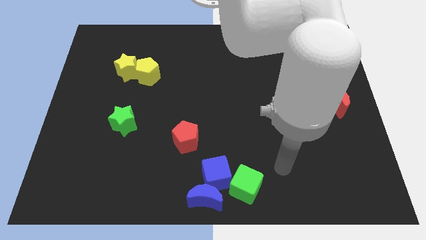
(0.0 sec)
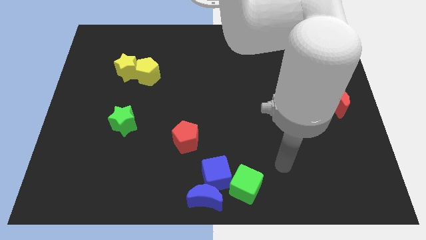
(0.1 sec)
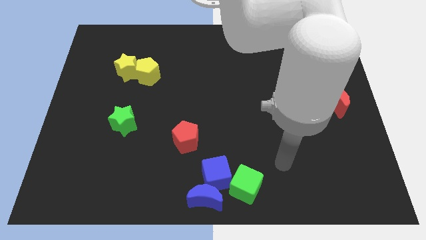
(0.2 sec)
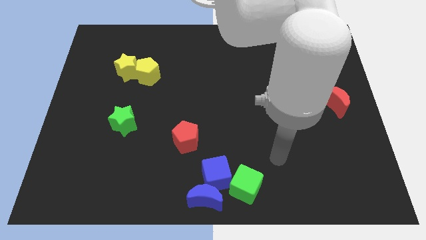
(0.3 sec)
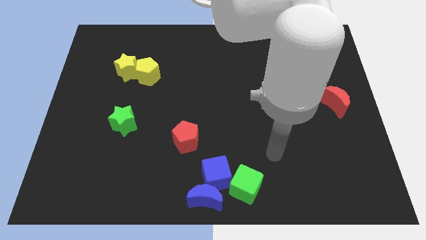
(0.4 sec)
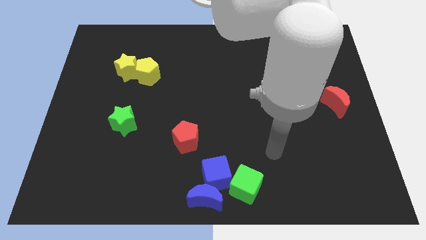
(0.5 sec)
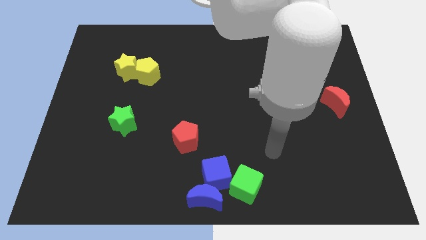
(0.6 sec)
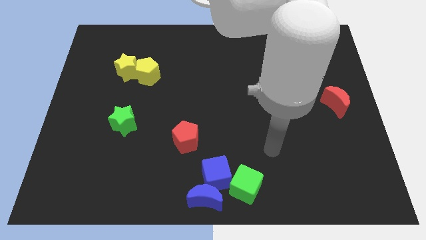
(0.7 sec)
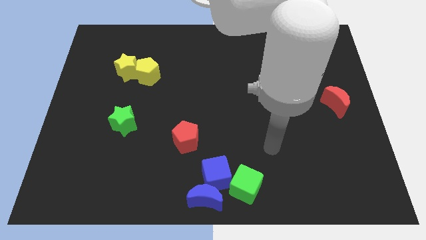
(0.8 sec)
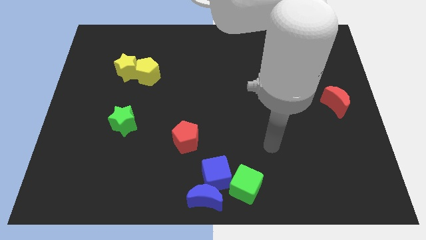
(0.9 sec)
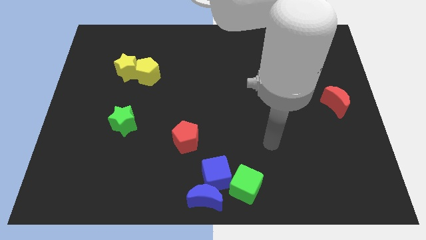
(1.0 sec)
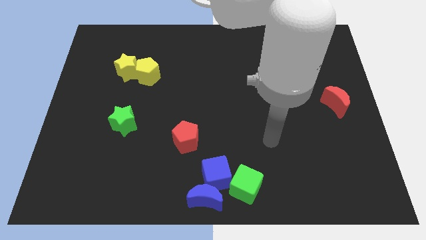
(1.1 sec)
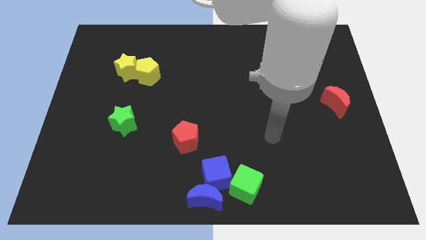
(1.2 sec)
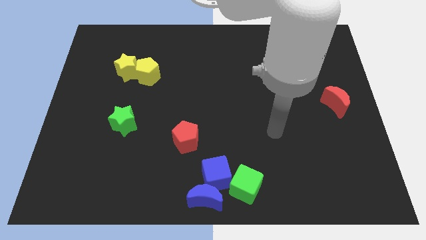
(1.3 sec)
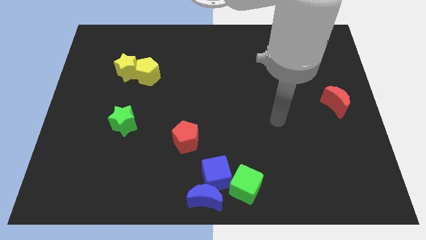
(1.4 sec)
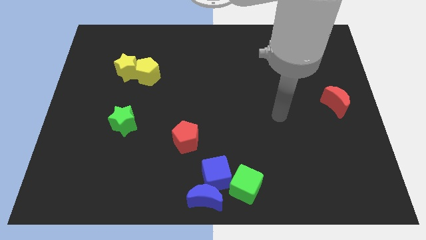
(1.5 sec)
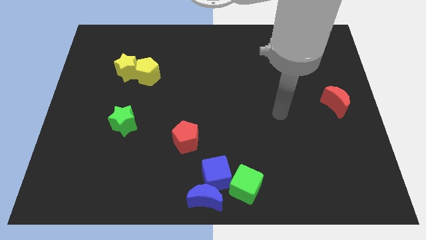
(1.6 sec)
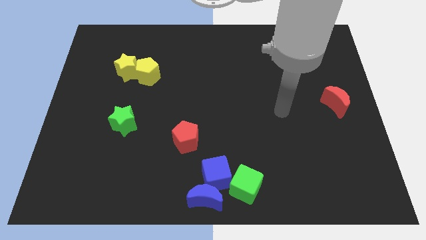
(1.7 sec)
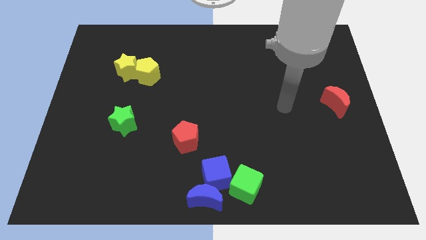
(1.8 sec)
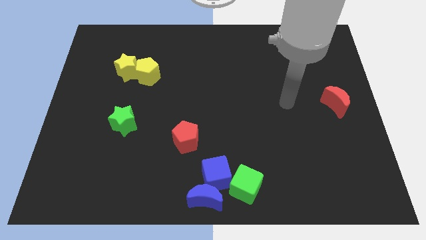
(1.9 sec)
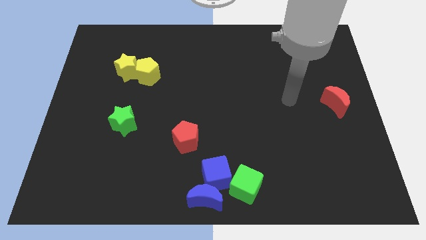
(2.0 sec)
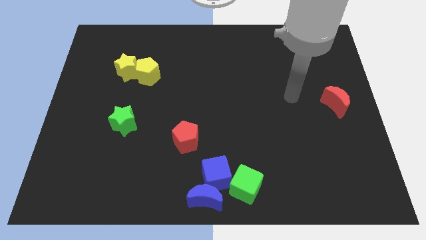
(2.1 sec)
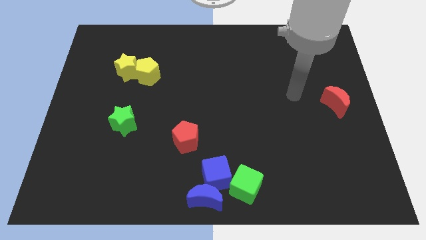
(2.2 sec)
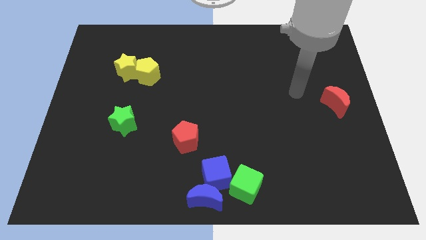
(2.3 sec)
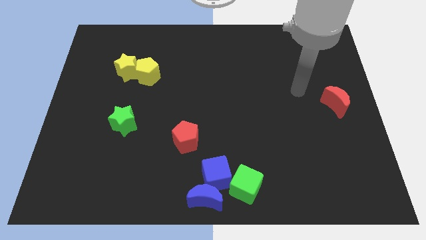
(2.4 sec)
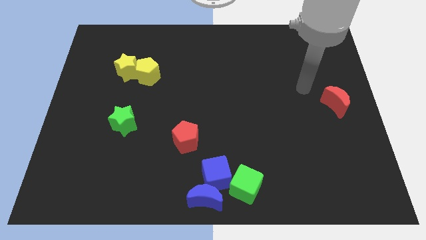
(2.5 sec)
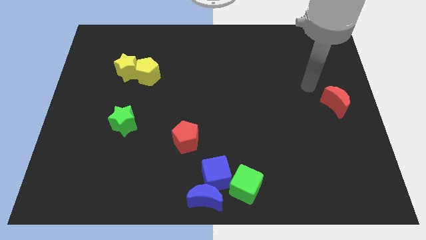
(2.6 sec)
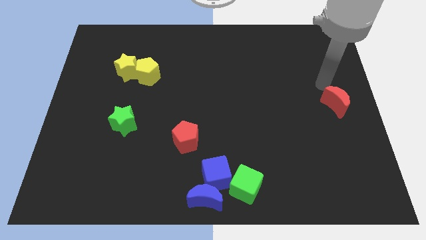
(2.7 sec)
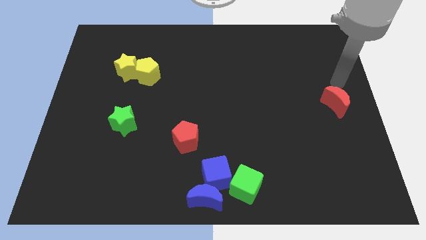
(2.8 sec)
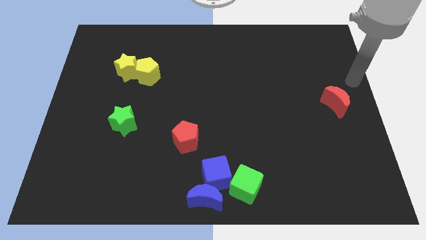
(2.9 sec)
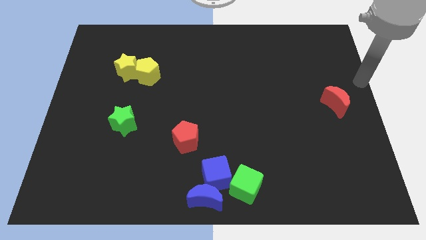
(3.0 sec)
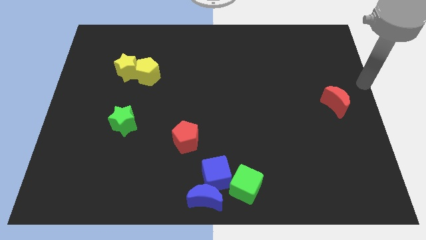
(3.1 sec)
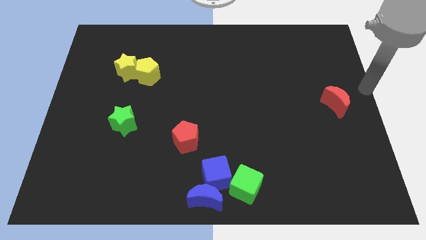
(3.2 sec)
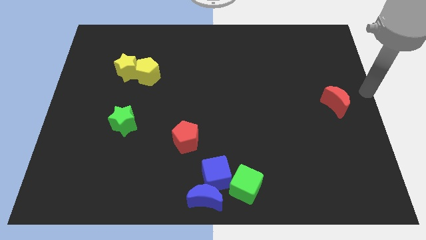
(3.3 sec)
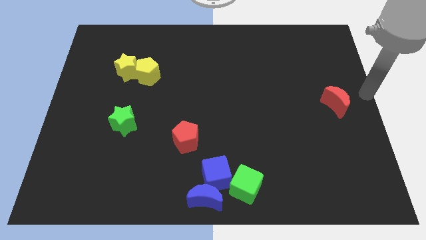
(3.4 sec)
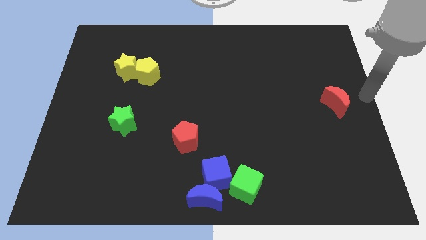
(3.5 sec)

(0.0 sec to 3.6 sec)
place your hand at the right center

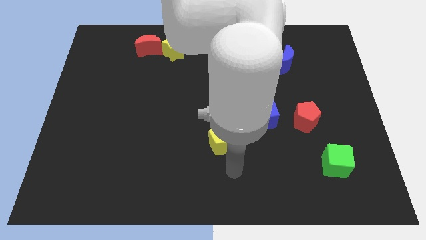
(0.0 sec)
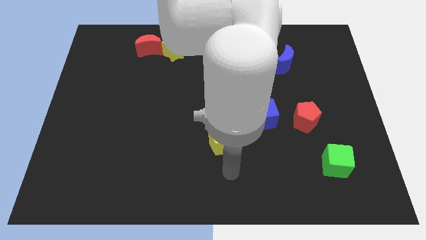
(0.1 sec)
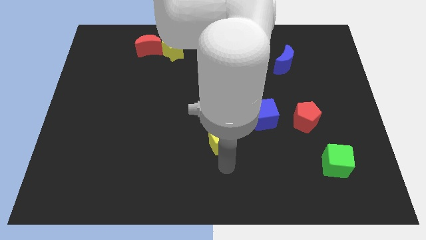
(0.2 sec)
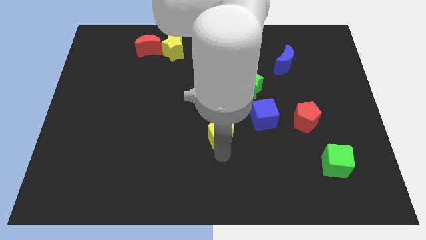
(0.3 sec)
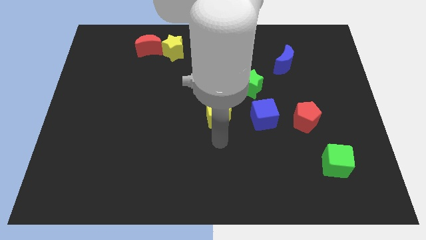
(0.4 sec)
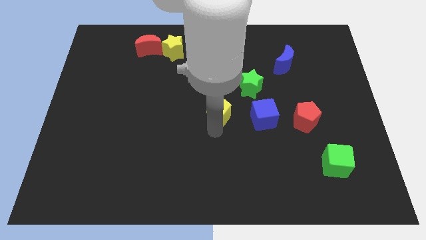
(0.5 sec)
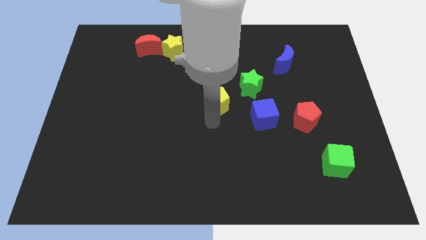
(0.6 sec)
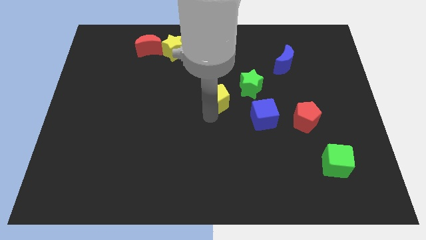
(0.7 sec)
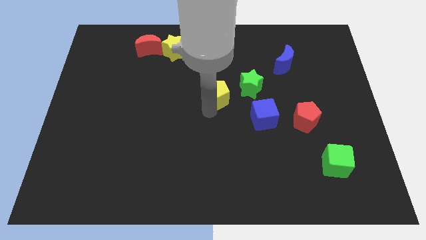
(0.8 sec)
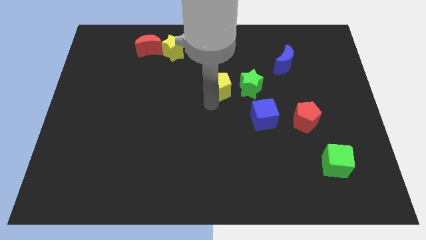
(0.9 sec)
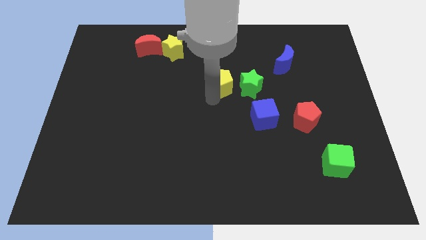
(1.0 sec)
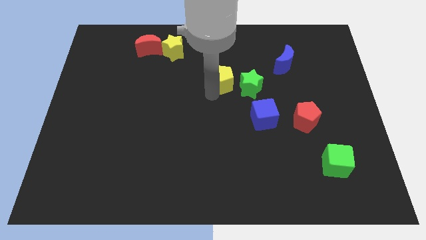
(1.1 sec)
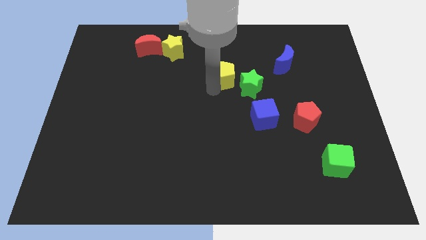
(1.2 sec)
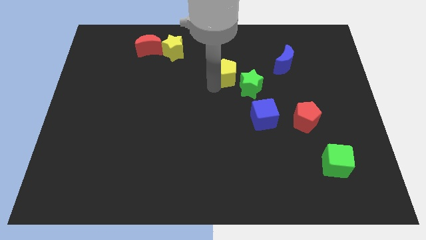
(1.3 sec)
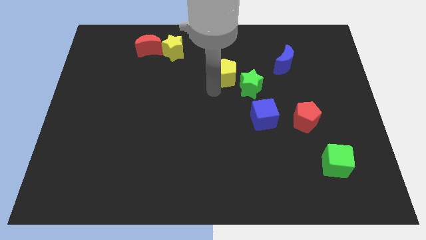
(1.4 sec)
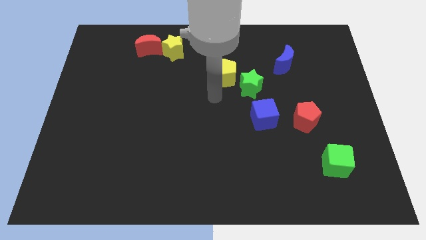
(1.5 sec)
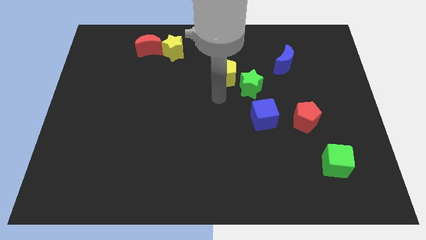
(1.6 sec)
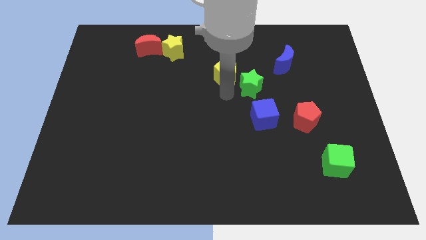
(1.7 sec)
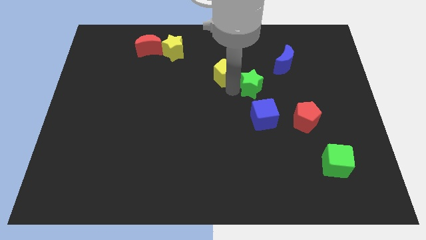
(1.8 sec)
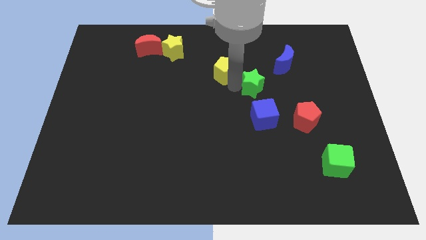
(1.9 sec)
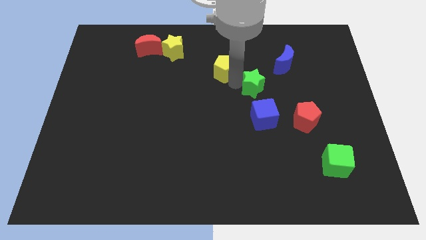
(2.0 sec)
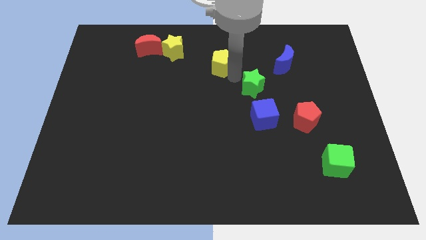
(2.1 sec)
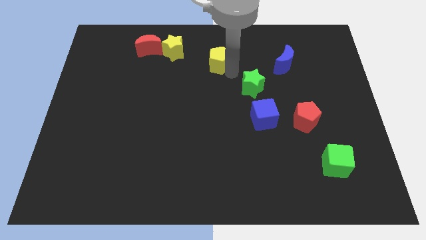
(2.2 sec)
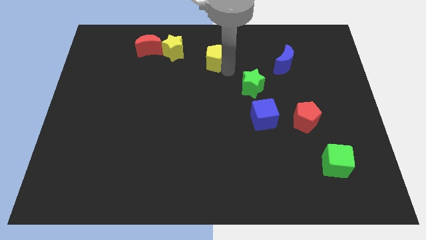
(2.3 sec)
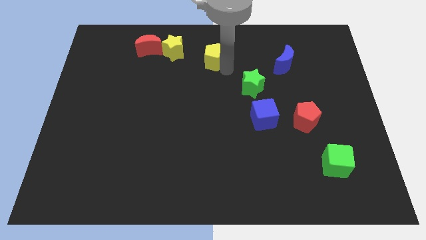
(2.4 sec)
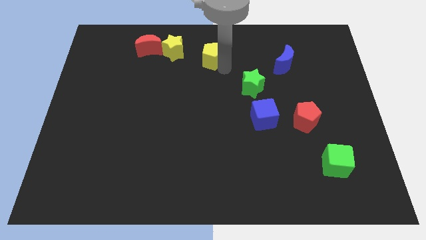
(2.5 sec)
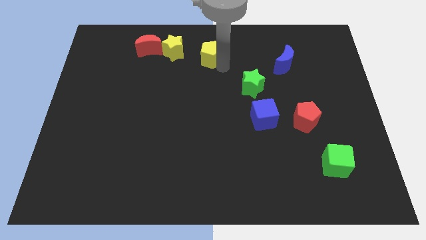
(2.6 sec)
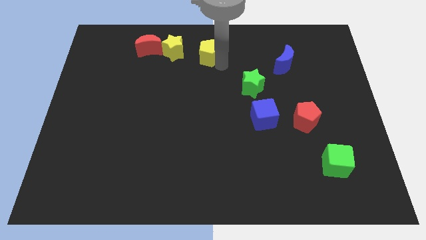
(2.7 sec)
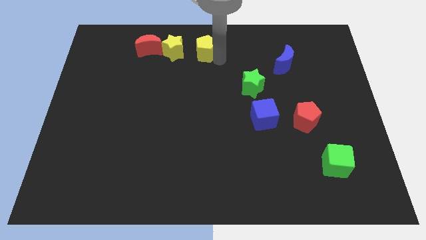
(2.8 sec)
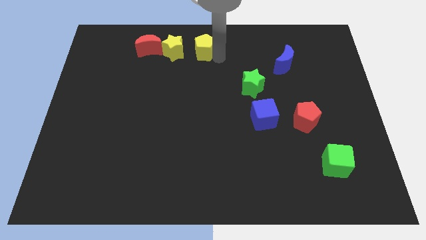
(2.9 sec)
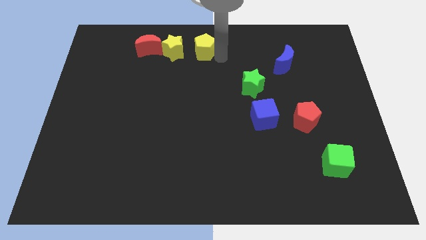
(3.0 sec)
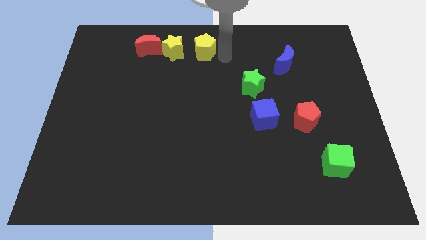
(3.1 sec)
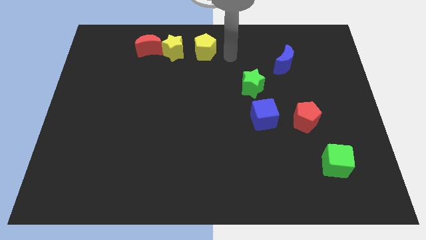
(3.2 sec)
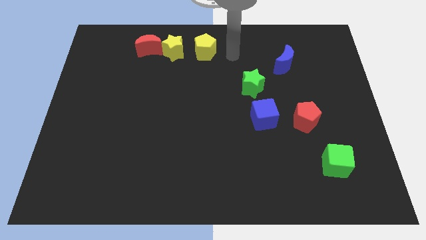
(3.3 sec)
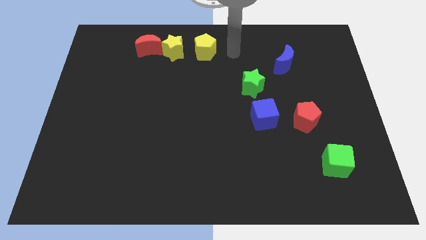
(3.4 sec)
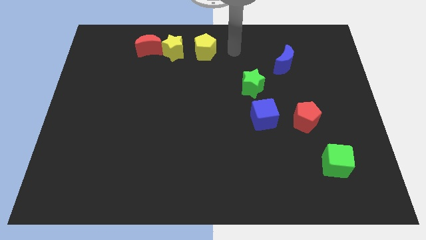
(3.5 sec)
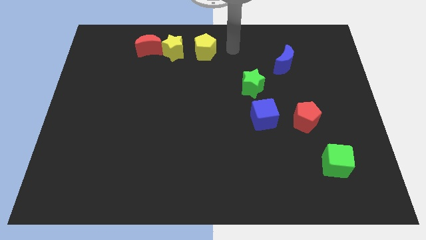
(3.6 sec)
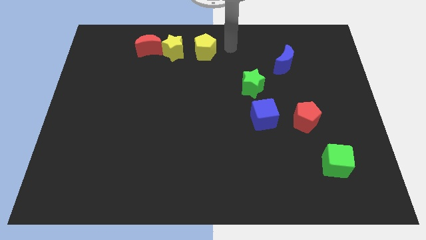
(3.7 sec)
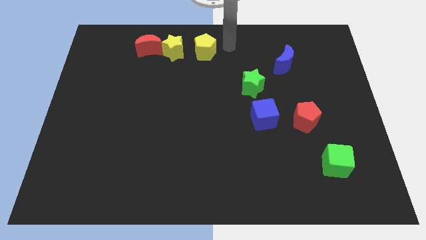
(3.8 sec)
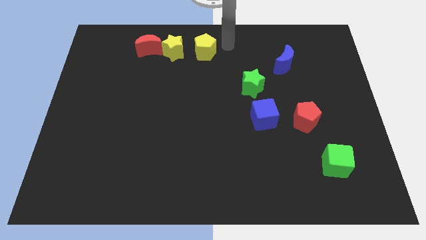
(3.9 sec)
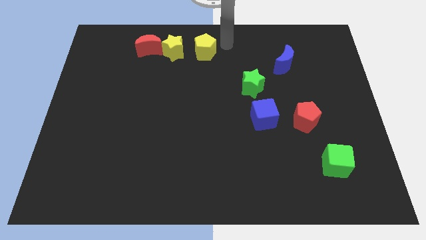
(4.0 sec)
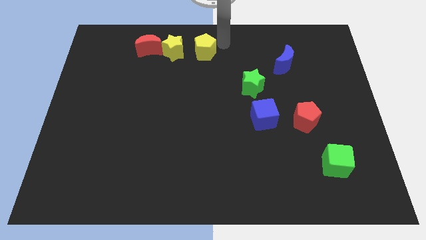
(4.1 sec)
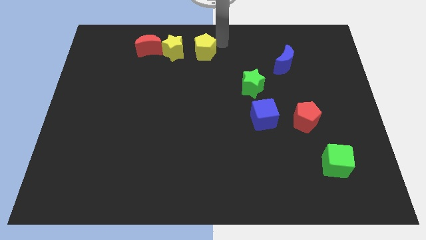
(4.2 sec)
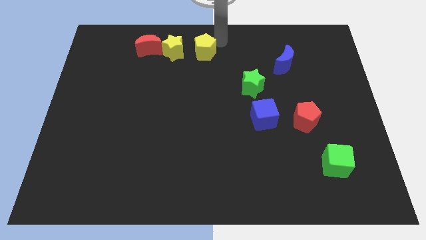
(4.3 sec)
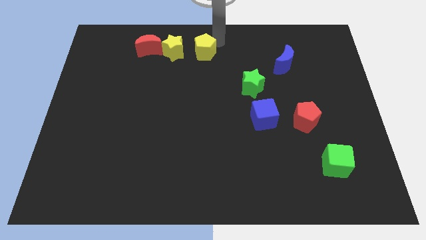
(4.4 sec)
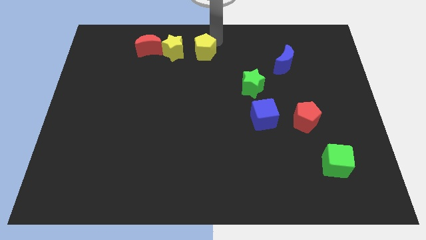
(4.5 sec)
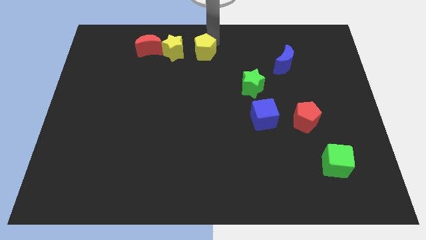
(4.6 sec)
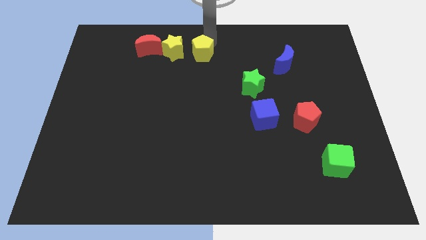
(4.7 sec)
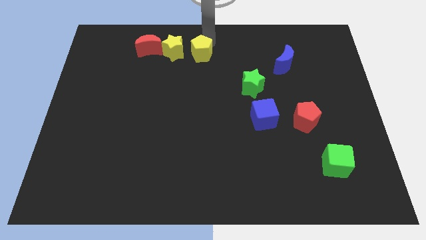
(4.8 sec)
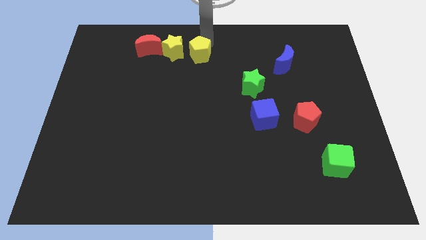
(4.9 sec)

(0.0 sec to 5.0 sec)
move the yellow pentagon right to the yellow star

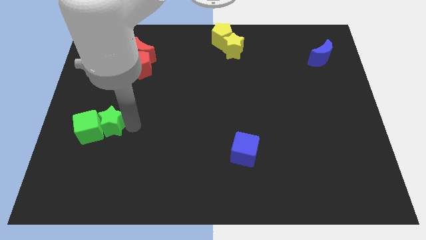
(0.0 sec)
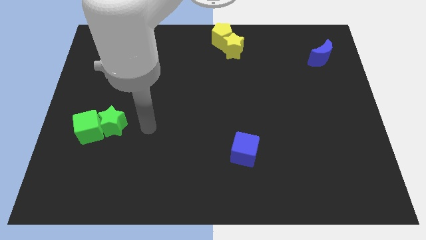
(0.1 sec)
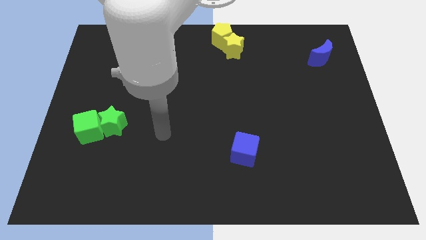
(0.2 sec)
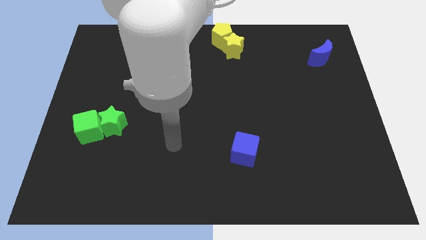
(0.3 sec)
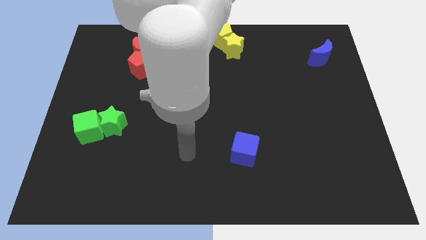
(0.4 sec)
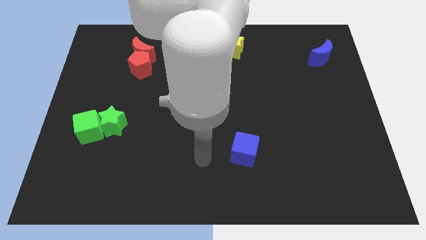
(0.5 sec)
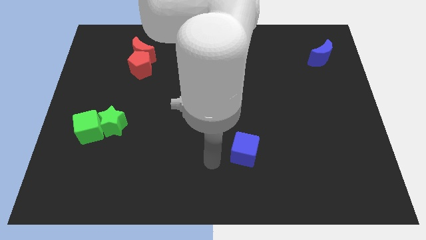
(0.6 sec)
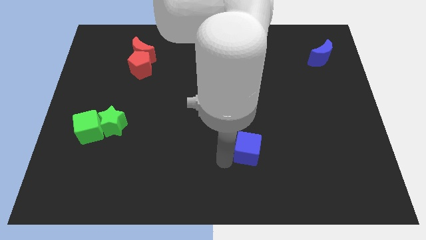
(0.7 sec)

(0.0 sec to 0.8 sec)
move your arm to the left of blue cube
